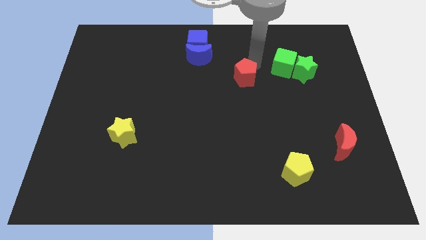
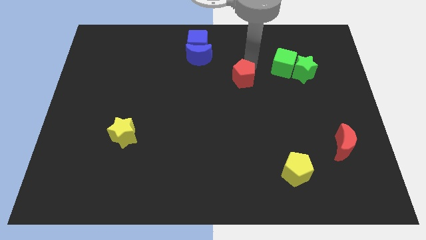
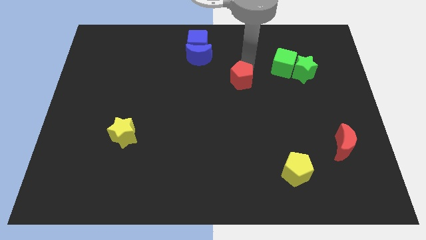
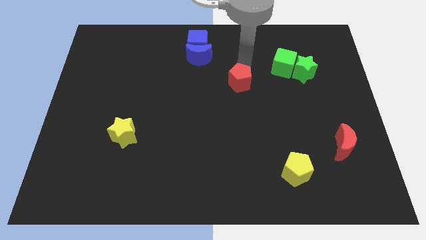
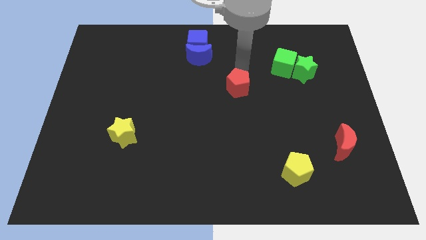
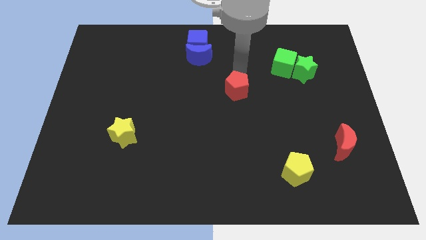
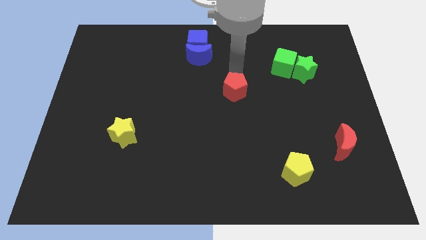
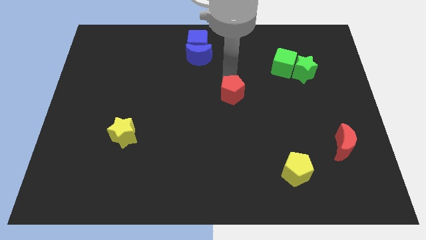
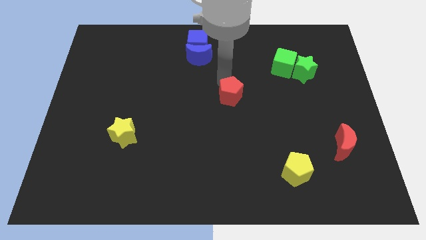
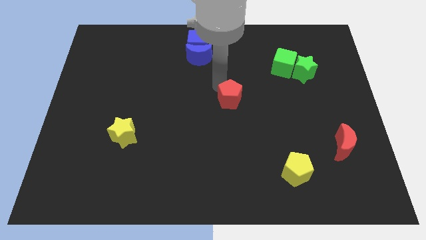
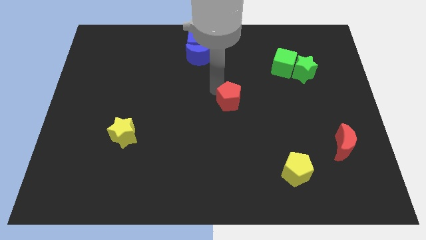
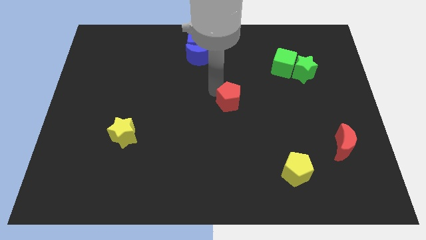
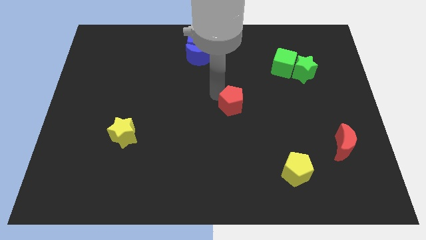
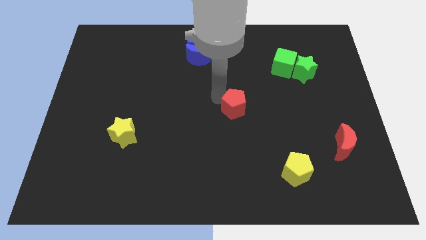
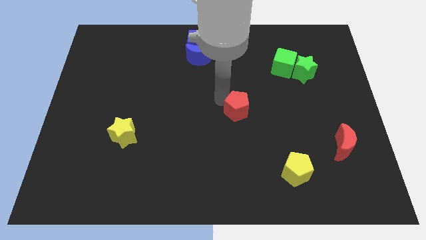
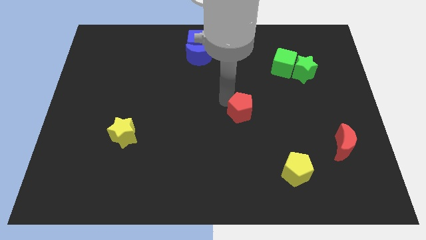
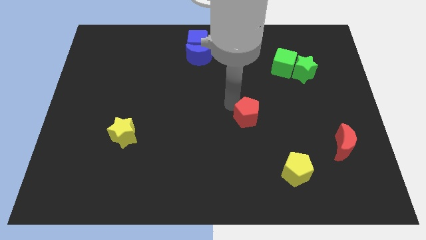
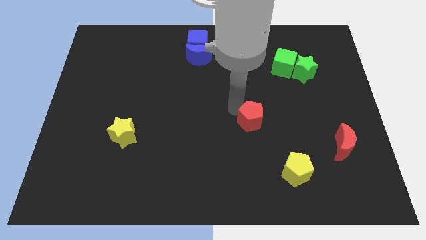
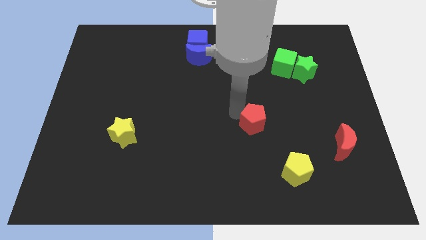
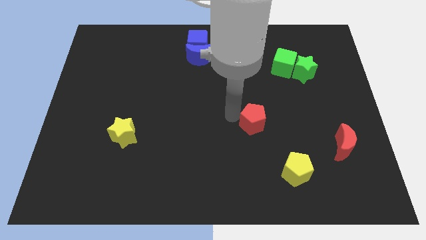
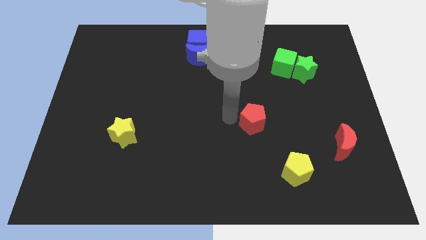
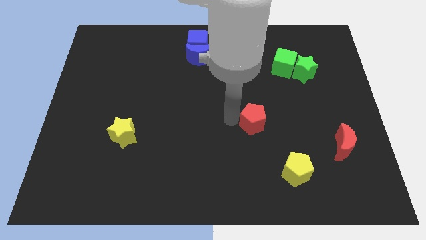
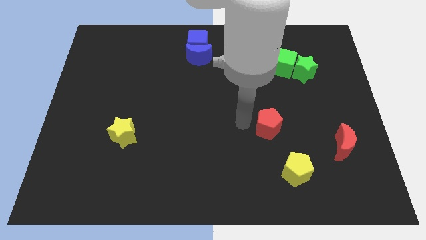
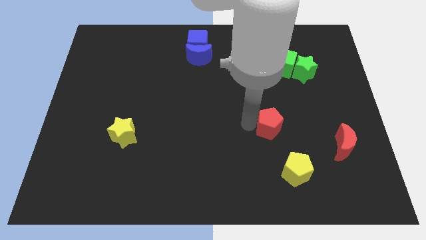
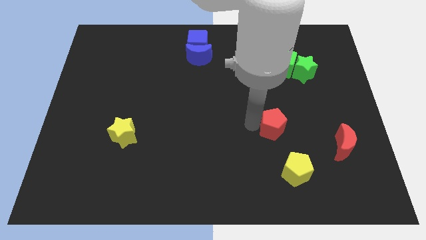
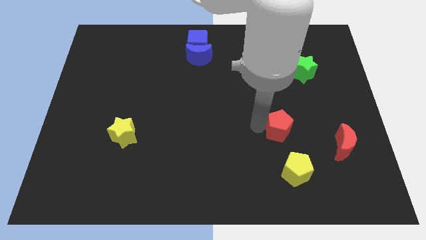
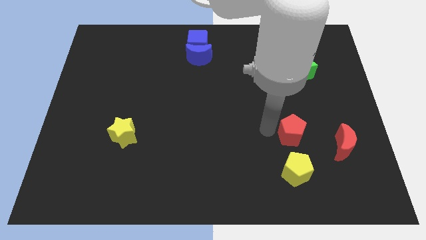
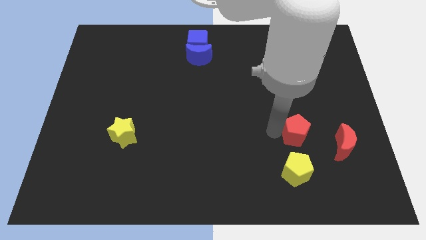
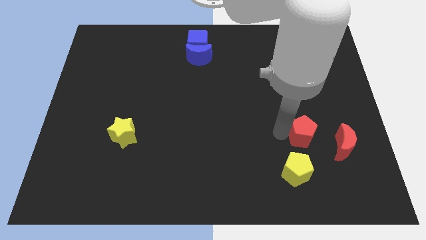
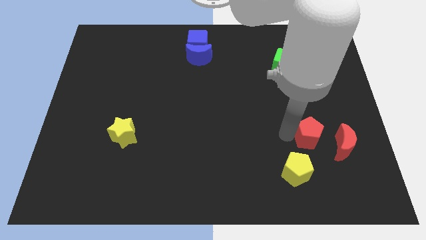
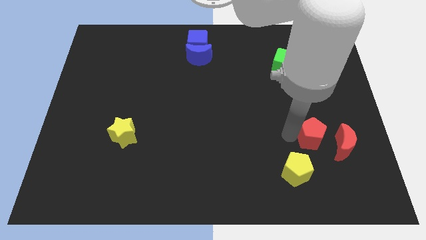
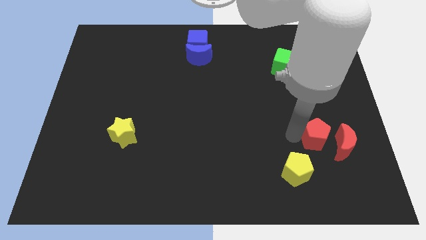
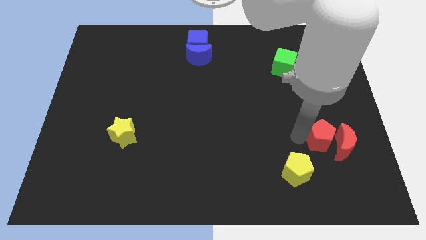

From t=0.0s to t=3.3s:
place the red pentagon to the left of red crescent

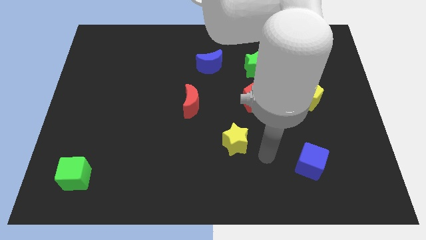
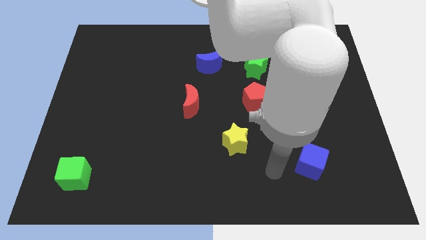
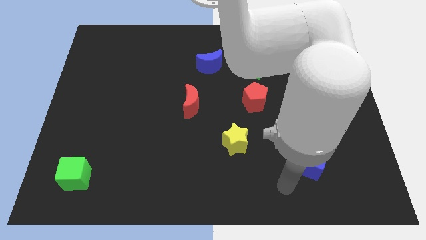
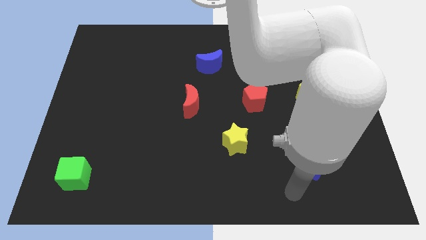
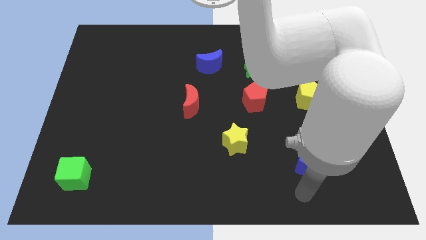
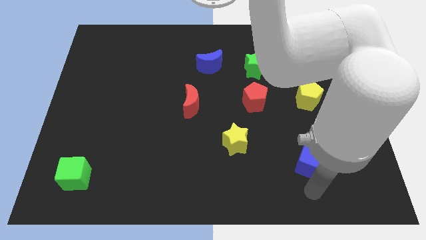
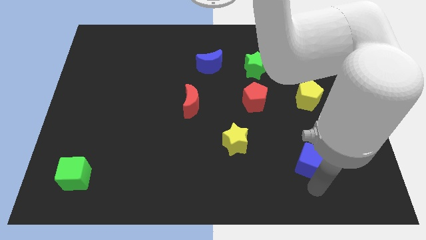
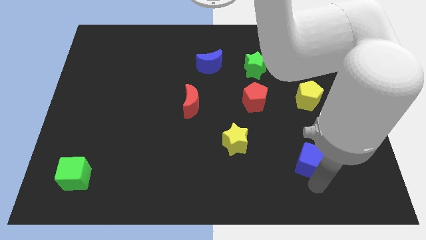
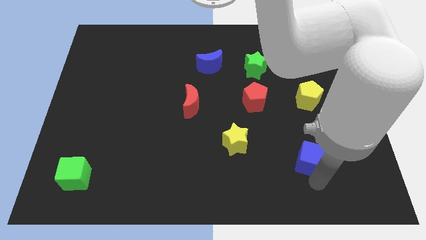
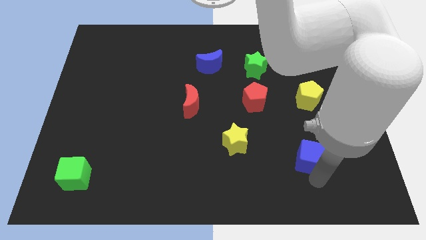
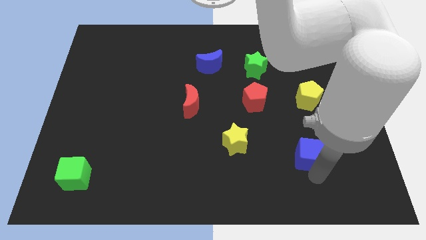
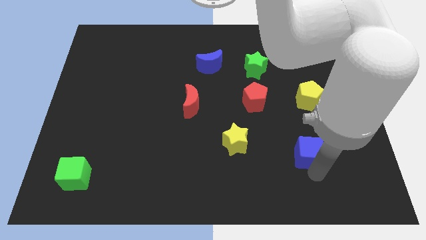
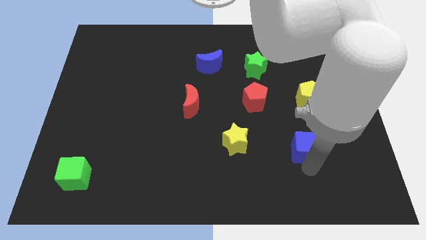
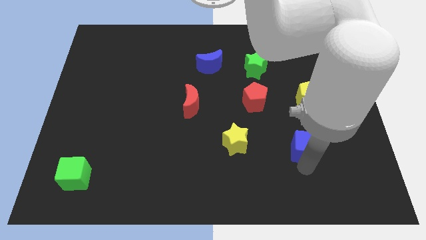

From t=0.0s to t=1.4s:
move the blue cube parallel yellow star

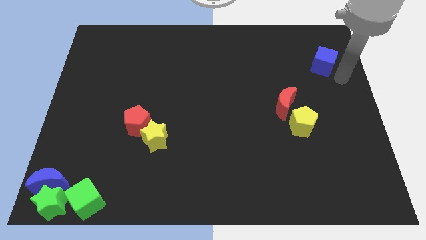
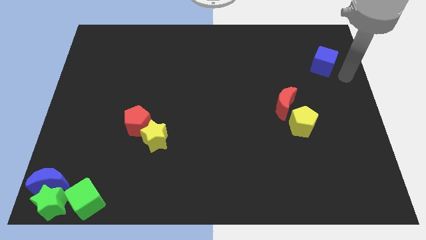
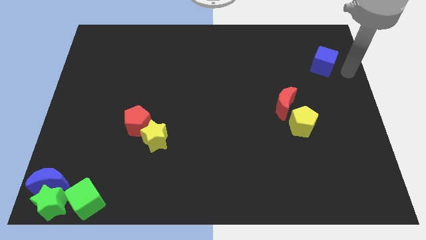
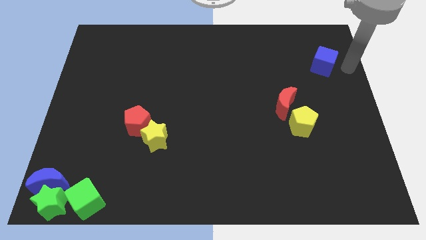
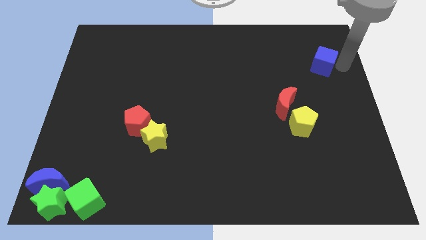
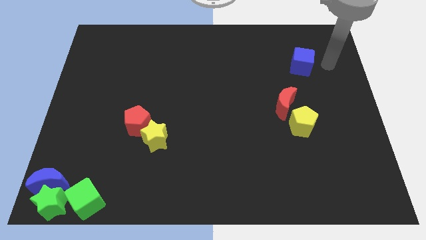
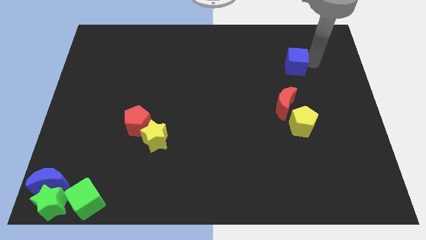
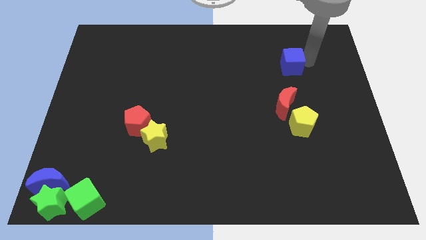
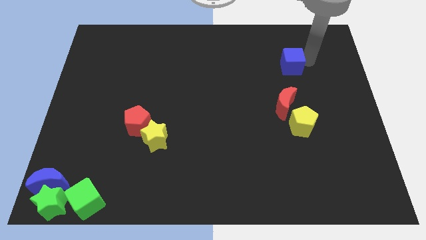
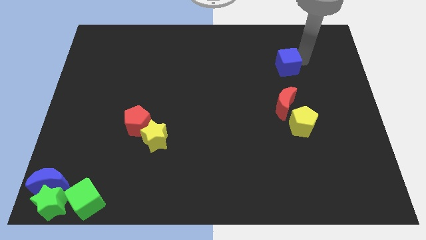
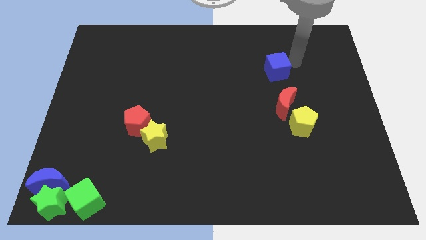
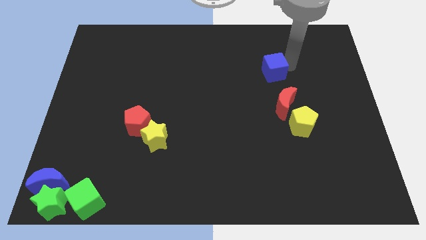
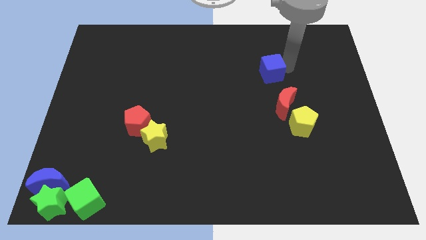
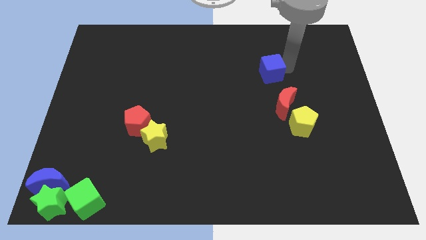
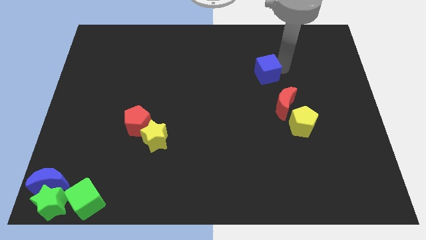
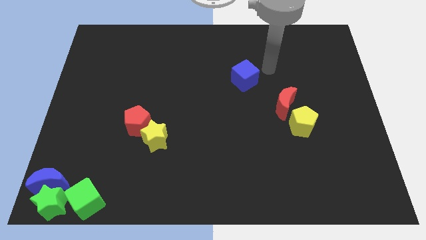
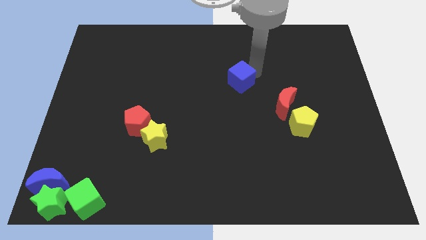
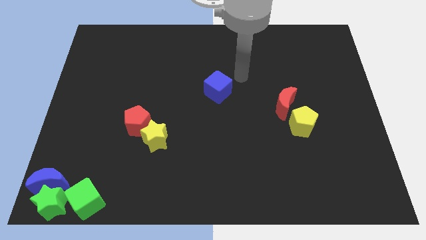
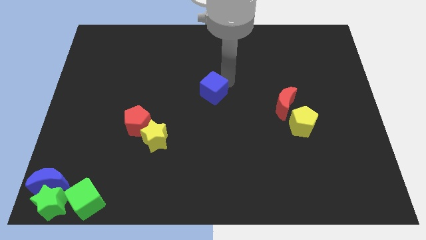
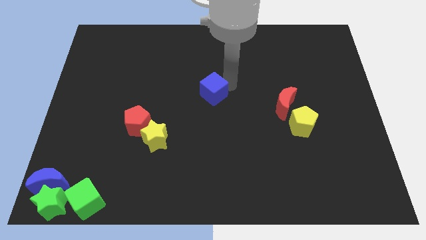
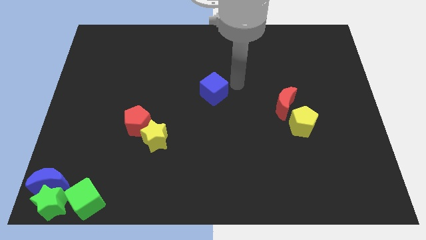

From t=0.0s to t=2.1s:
push the blue moon towards the center of the board

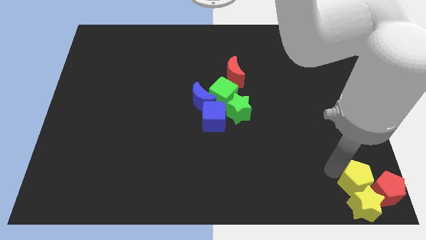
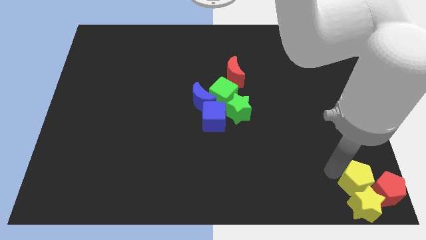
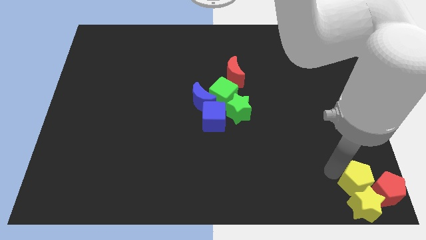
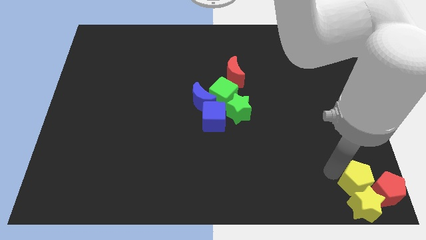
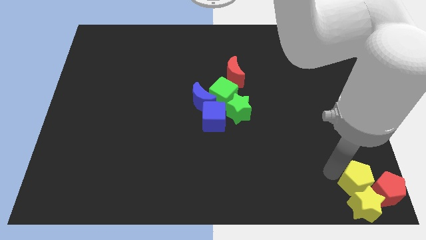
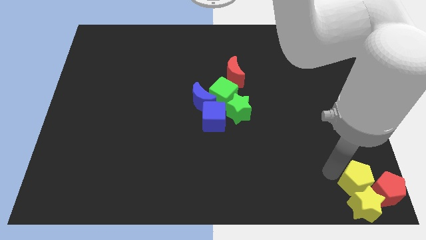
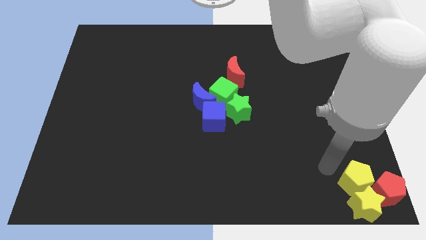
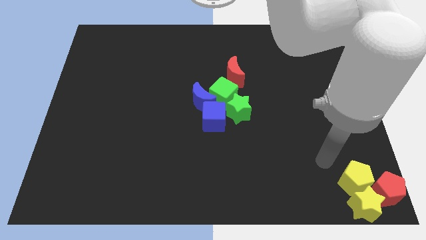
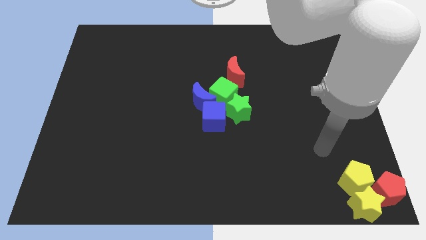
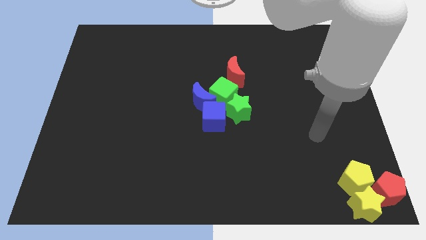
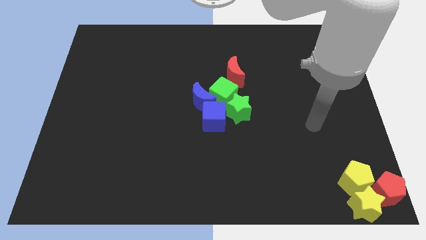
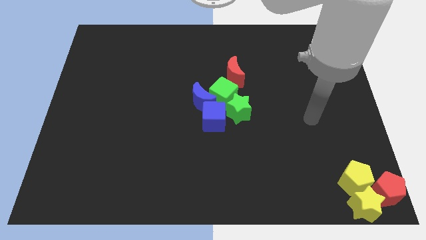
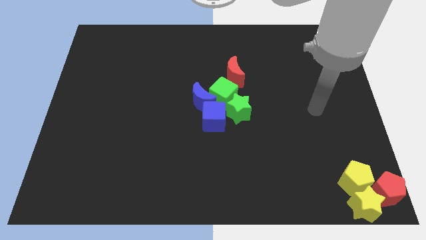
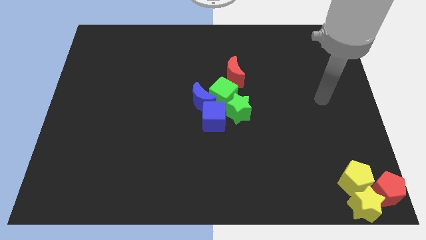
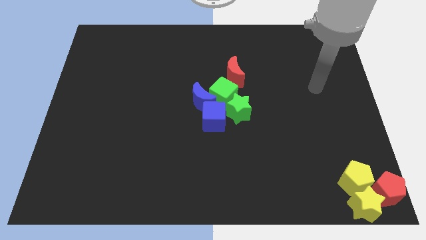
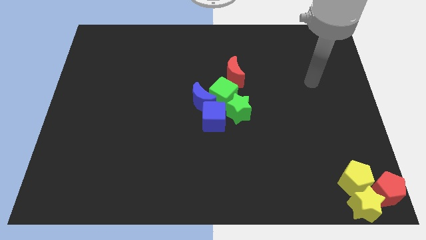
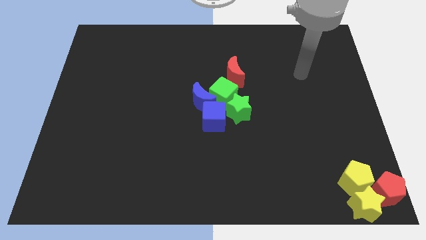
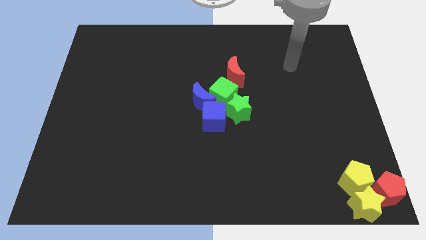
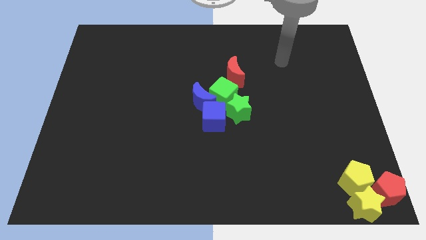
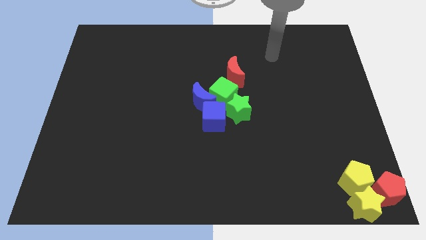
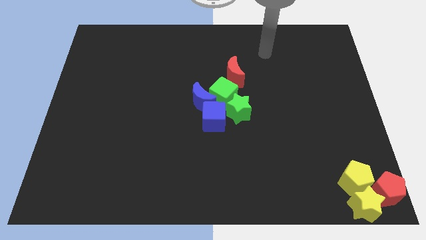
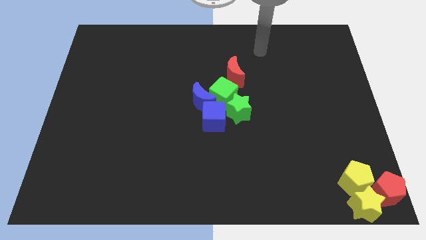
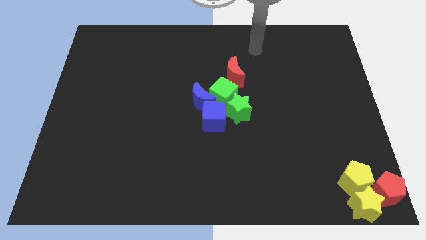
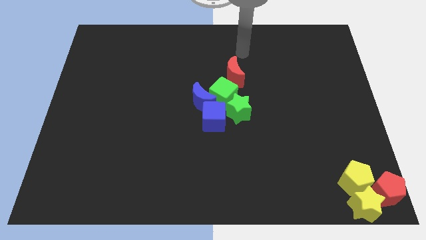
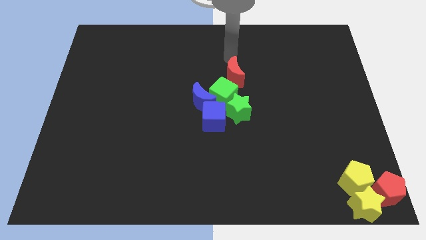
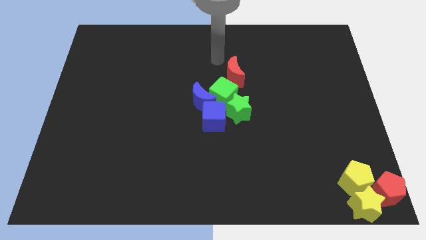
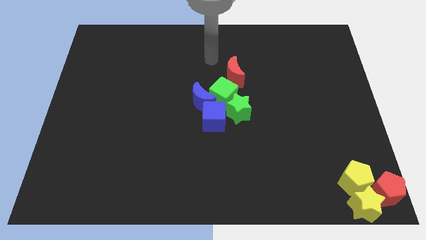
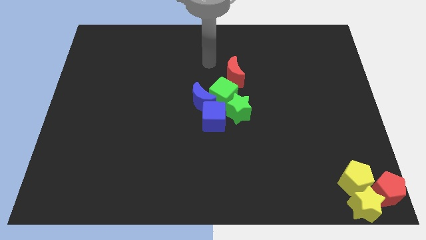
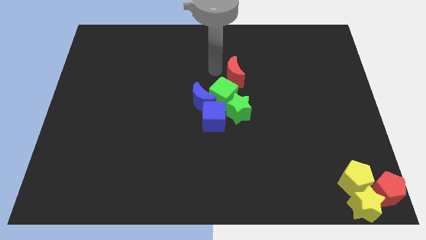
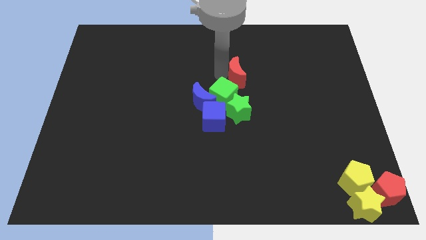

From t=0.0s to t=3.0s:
move your arm to the top of the green cube
